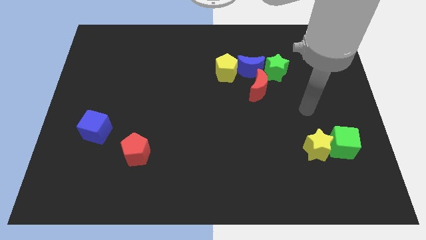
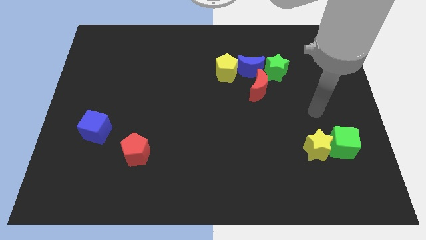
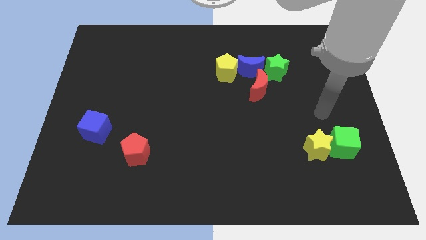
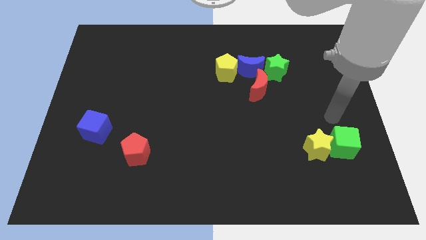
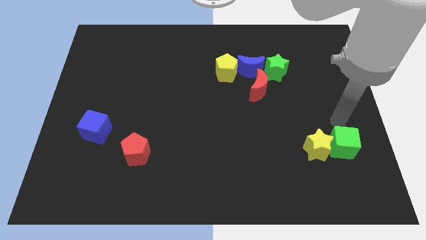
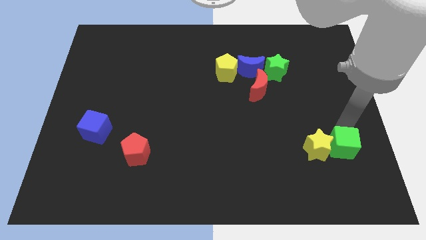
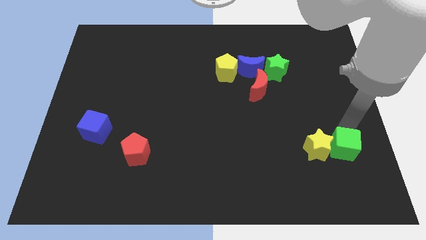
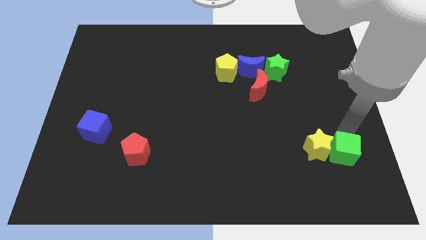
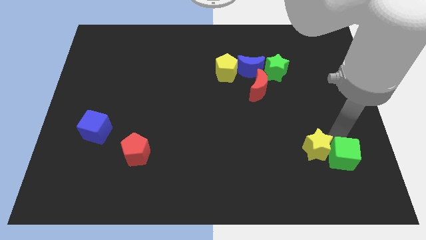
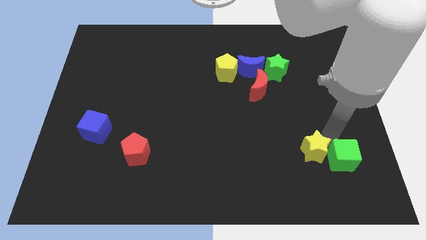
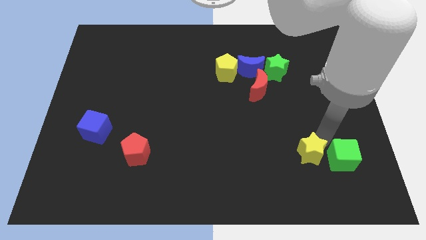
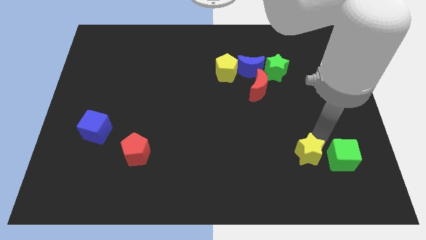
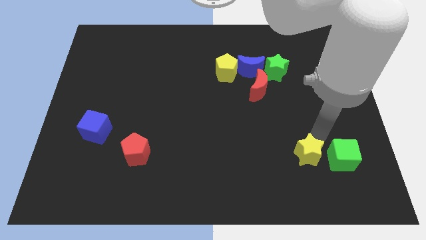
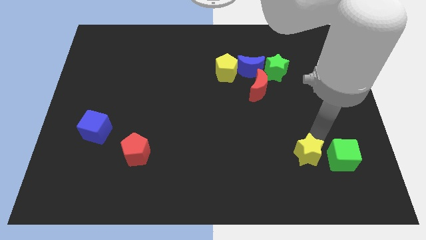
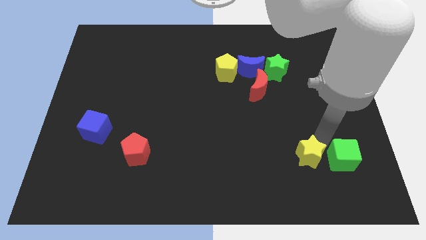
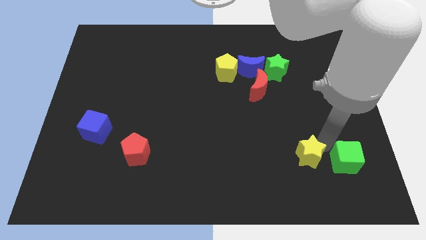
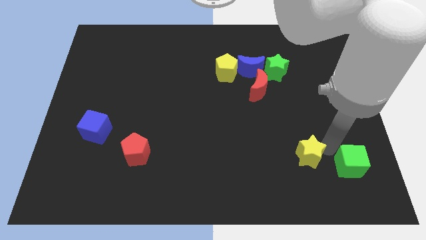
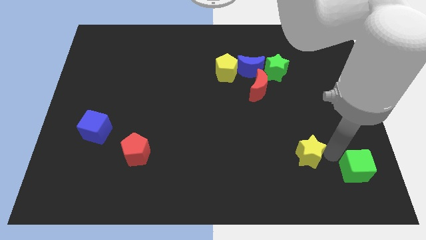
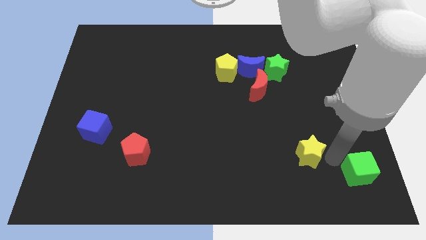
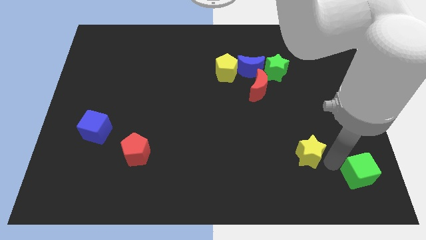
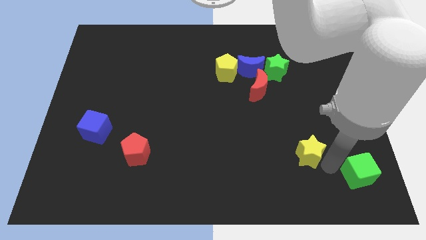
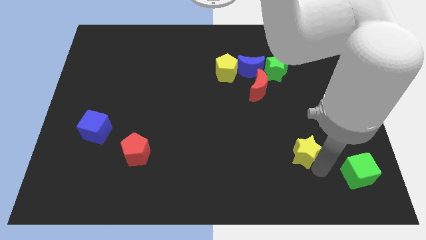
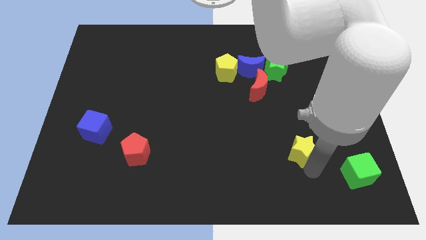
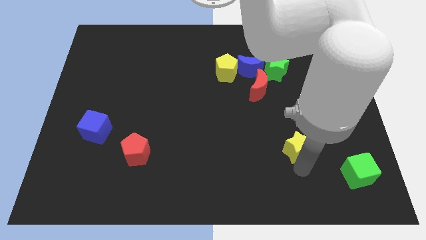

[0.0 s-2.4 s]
separate the green cube and yellow star

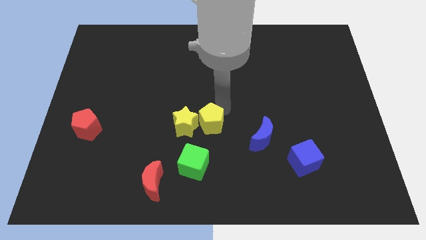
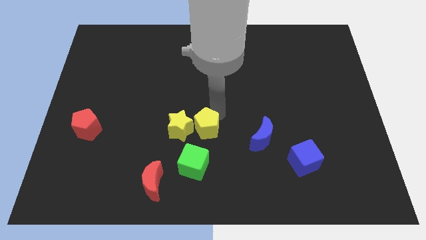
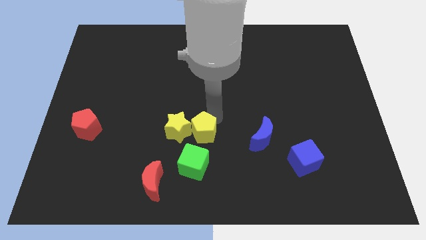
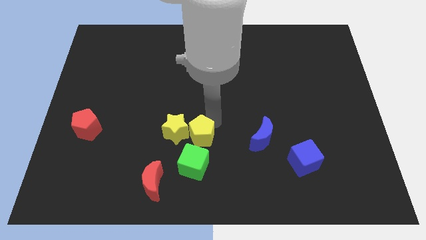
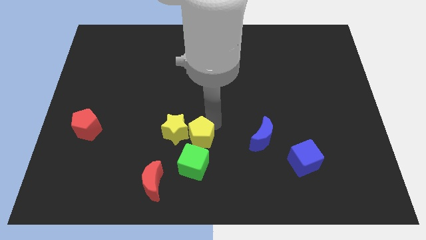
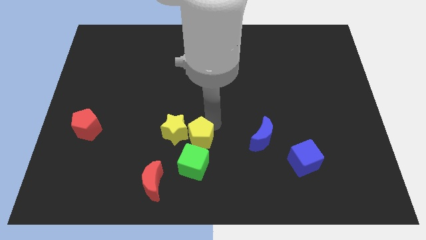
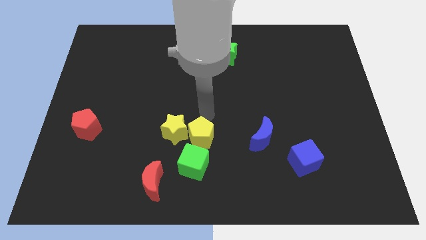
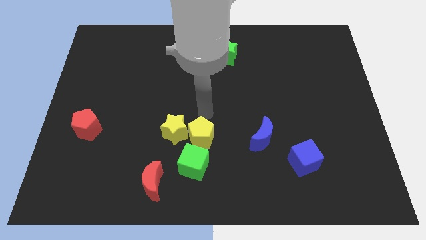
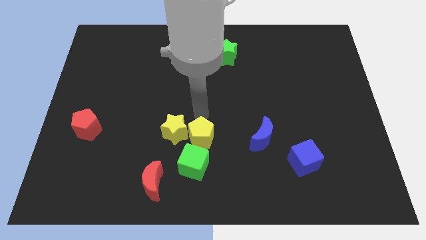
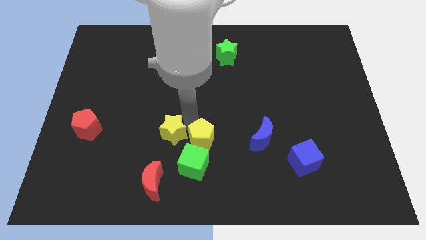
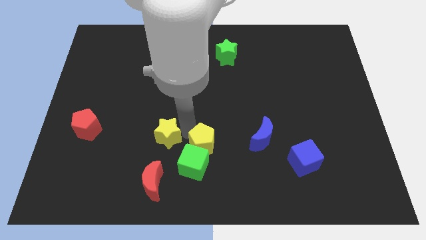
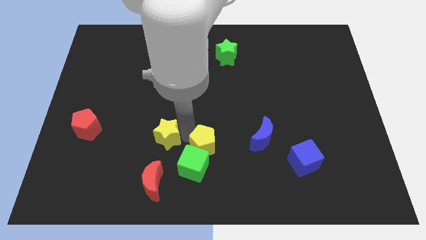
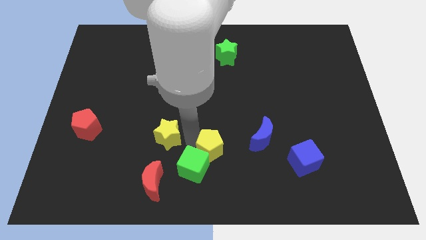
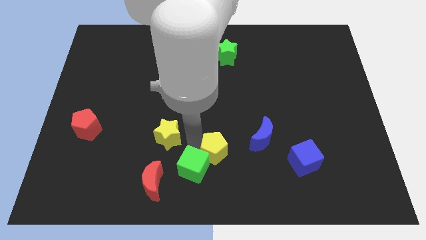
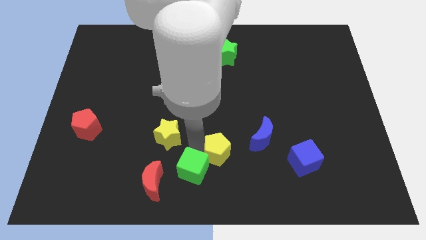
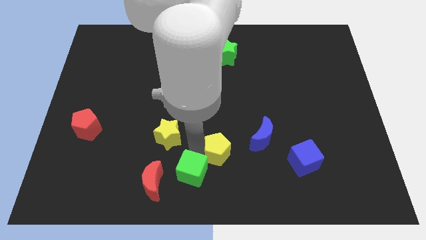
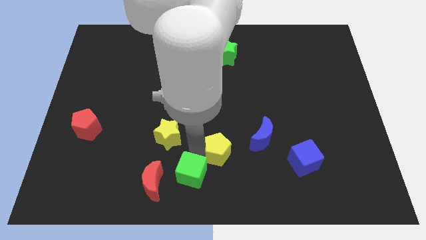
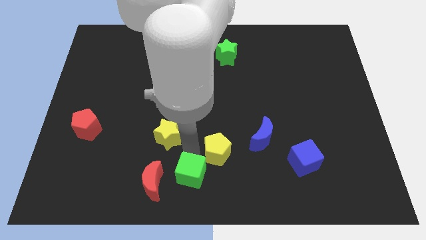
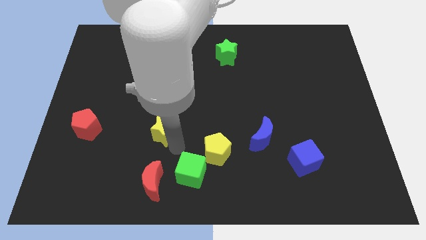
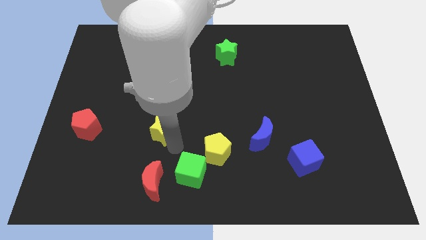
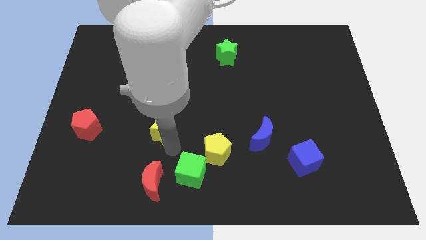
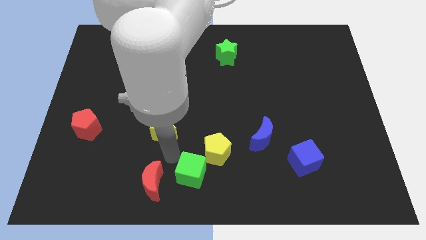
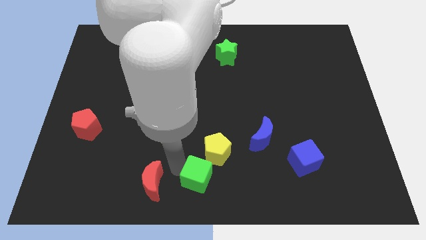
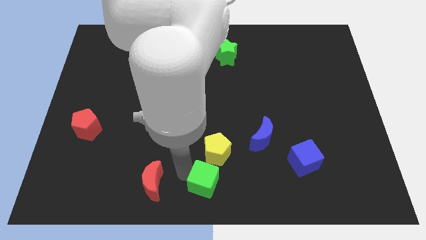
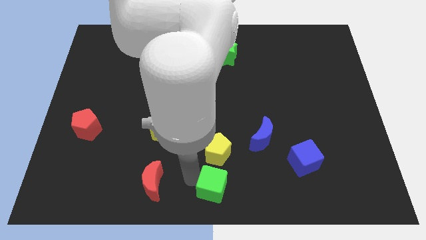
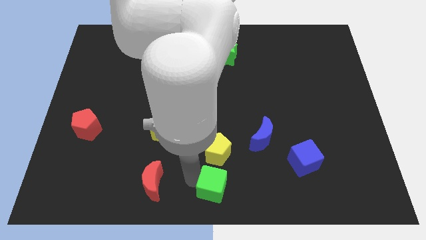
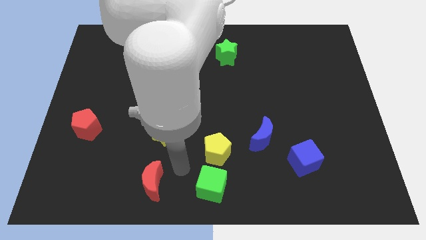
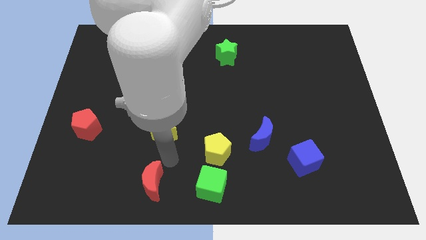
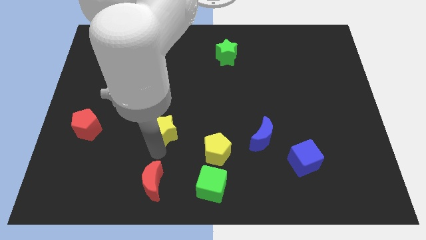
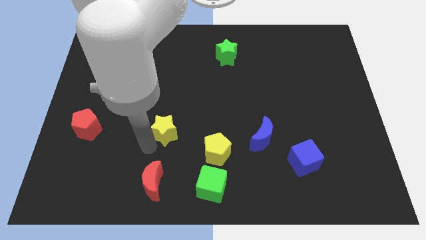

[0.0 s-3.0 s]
move green cube to the bottom of yellow pentagon

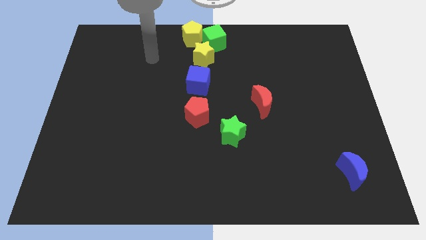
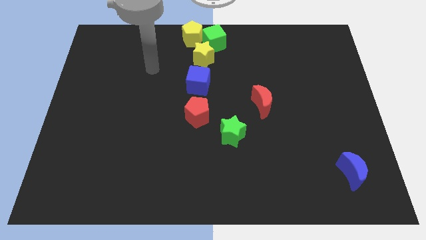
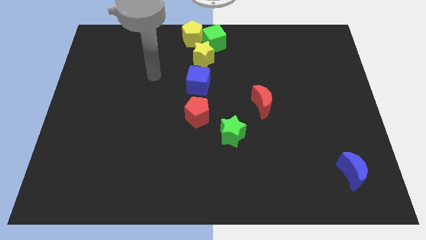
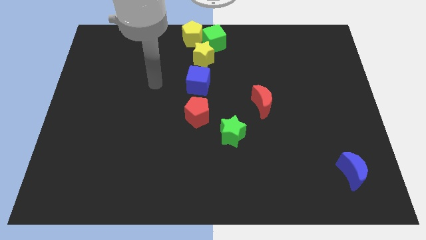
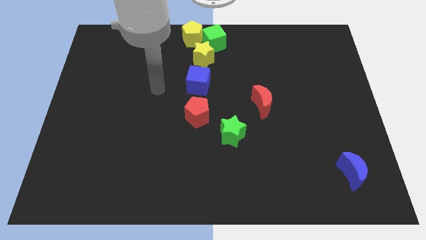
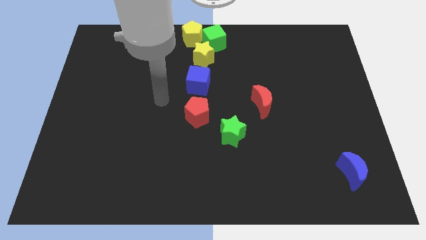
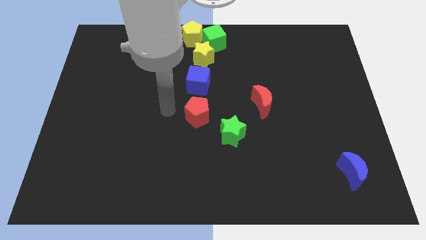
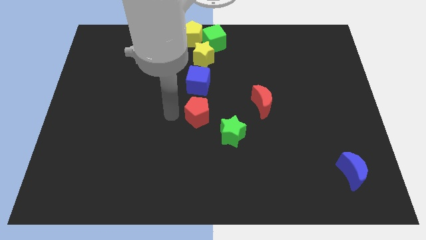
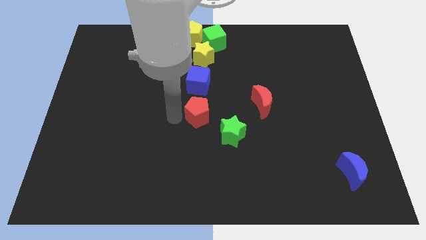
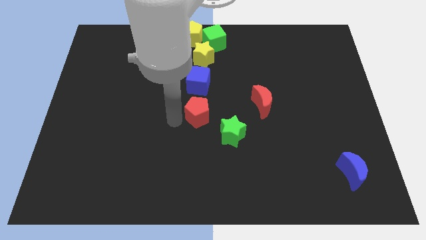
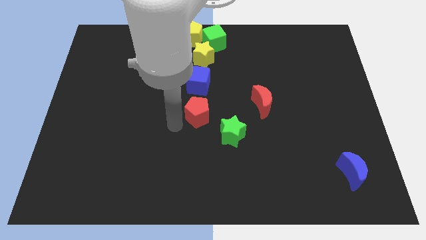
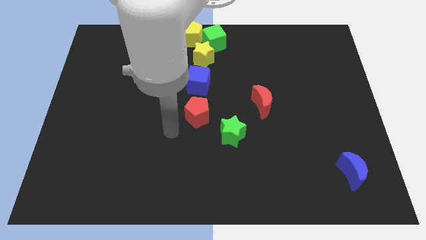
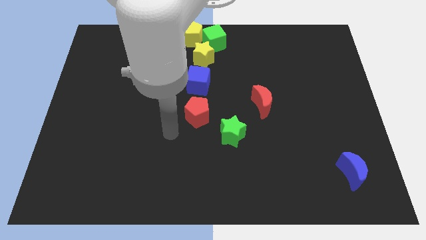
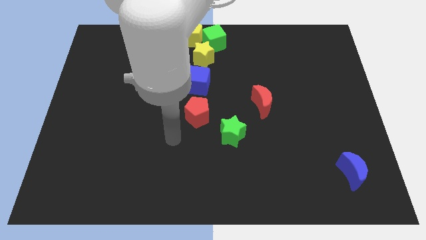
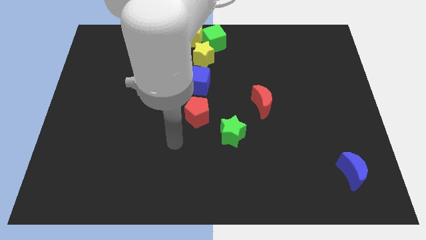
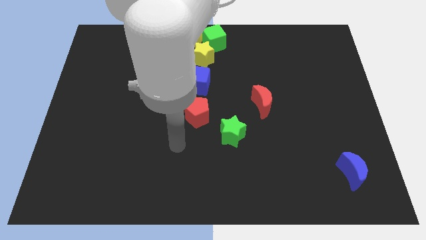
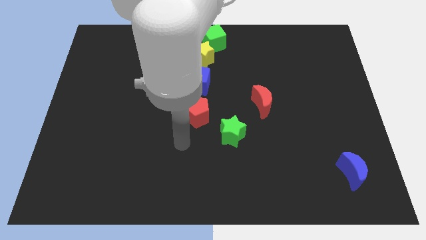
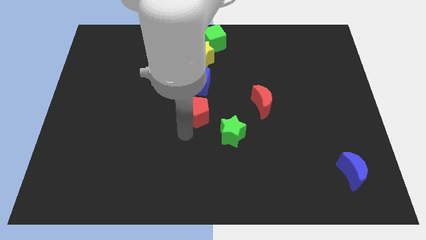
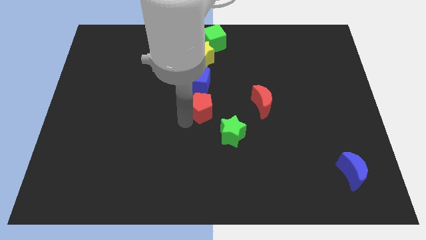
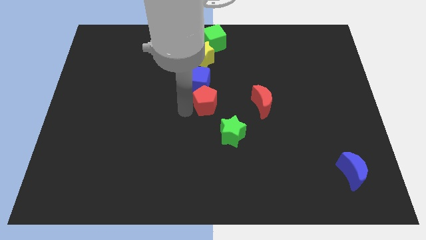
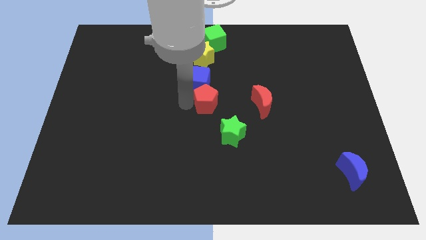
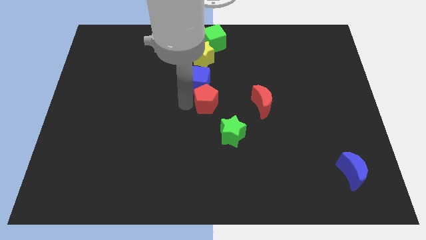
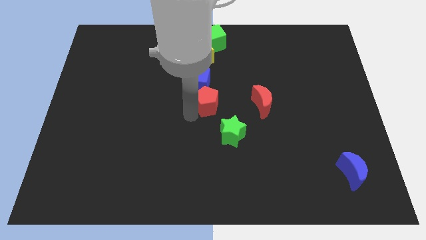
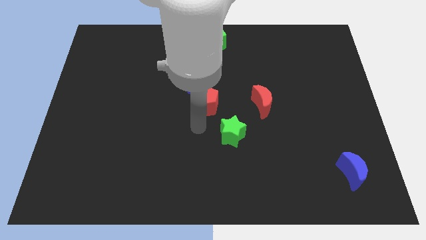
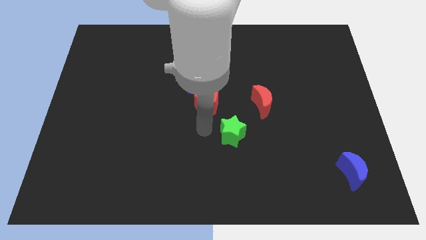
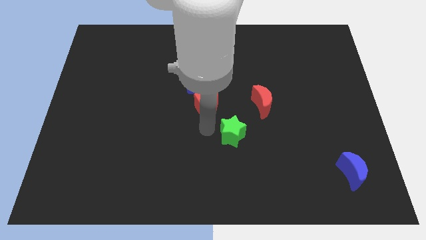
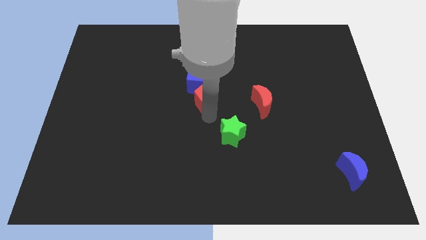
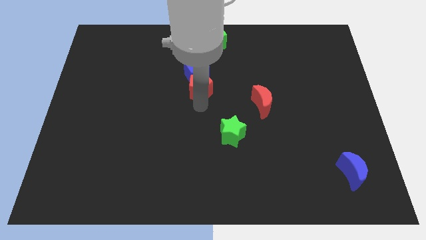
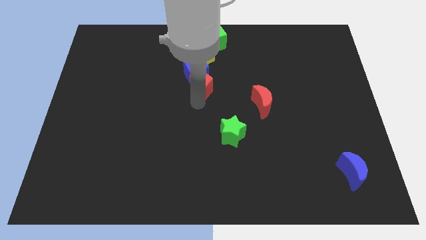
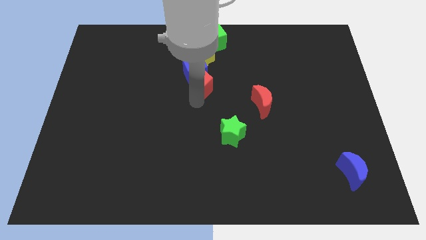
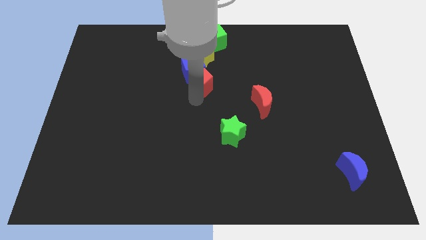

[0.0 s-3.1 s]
place red pentagon near blue cube

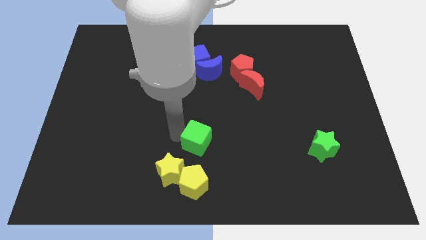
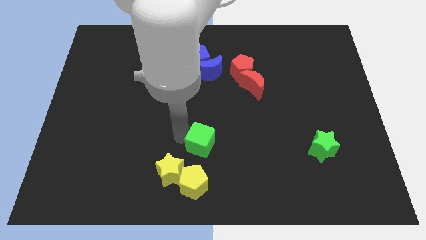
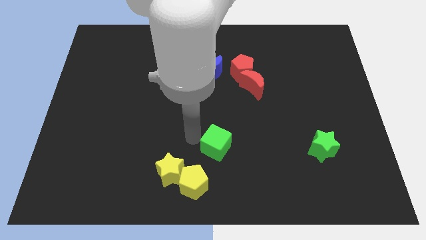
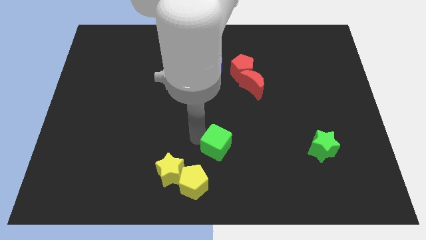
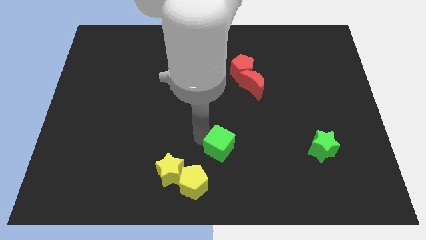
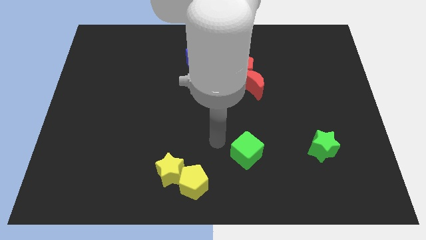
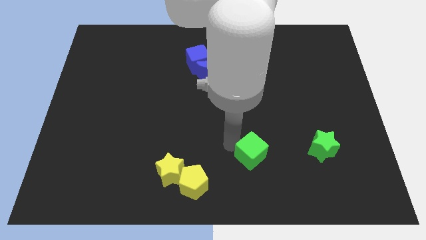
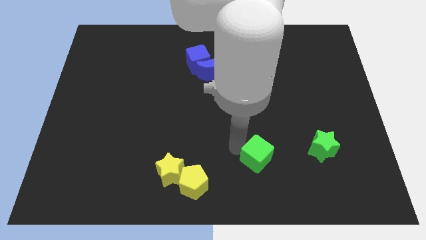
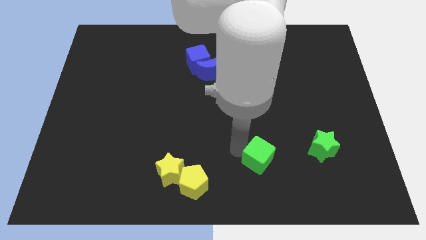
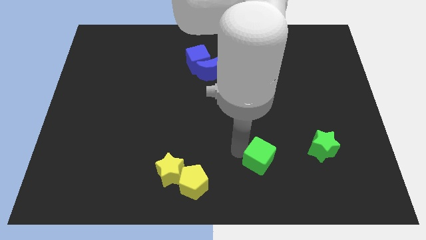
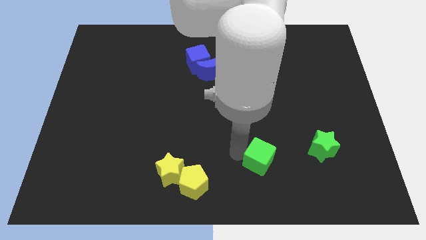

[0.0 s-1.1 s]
place the green cube in between yellow pentagon and green star
